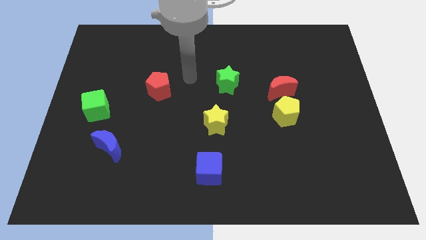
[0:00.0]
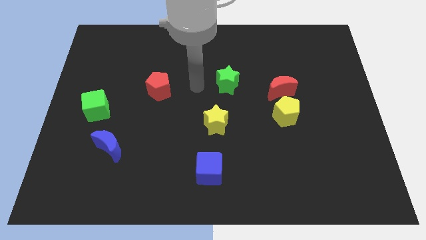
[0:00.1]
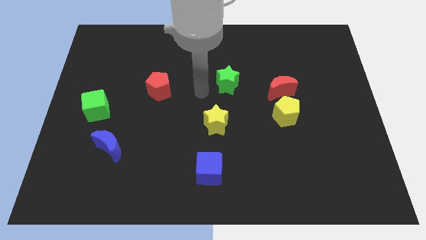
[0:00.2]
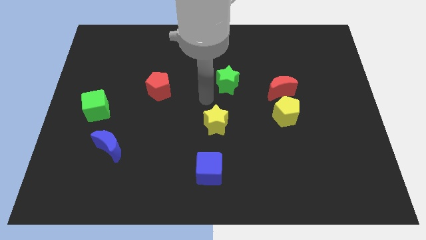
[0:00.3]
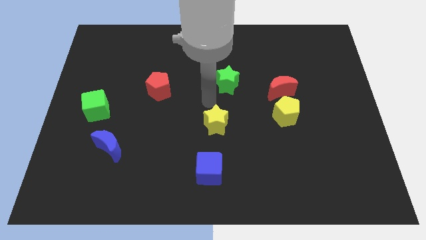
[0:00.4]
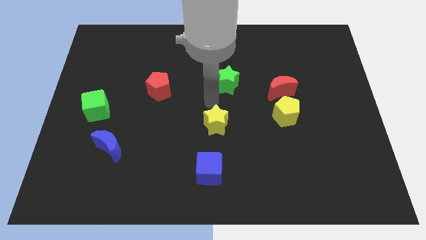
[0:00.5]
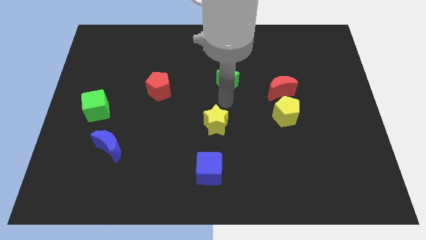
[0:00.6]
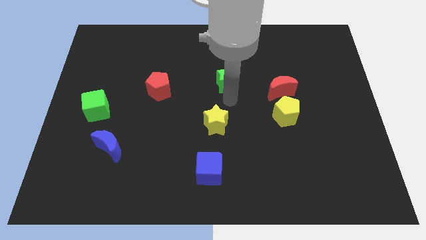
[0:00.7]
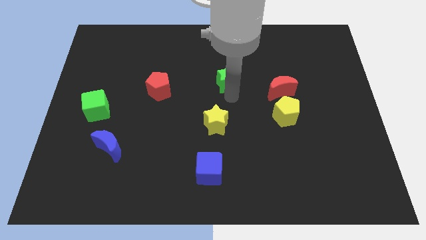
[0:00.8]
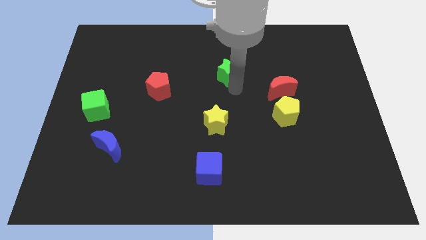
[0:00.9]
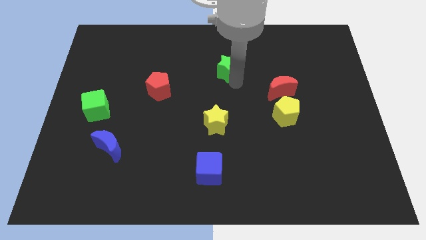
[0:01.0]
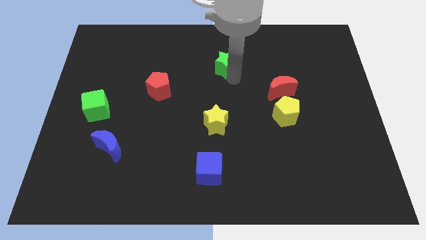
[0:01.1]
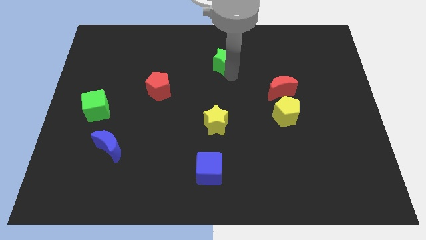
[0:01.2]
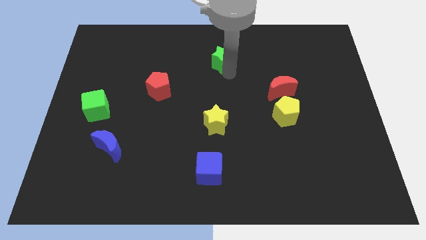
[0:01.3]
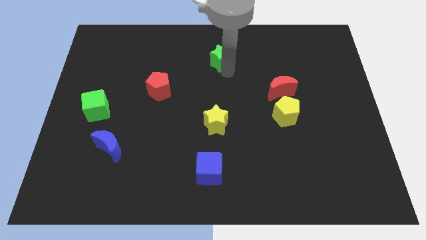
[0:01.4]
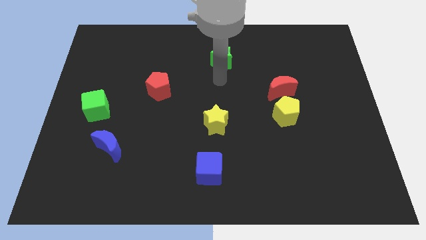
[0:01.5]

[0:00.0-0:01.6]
push the green star slightly upwards

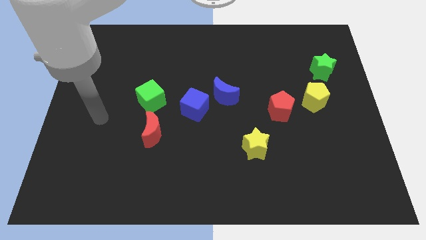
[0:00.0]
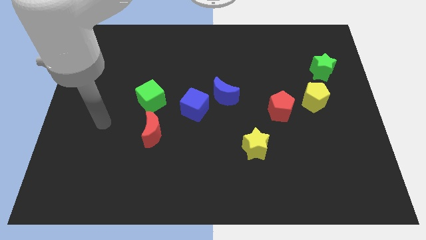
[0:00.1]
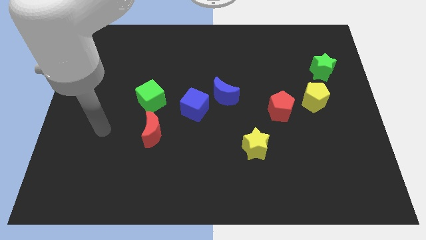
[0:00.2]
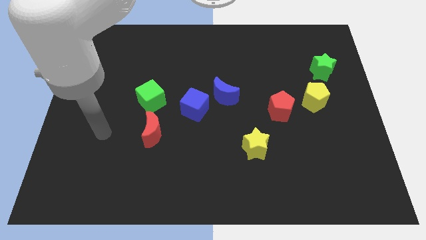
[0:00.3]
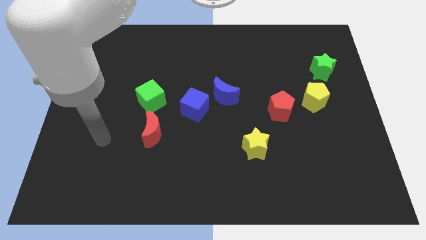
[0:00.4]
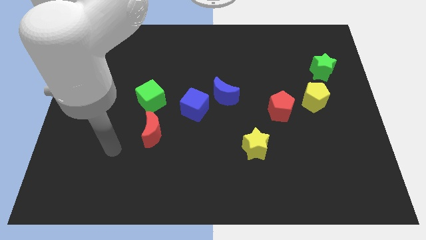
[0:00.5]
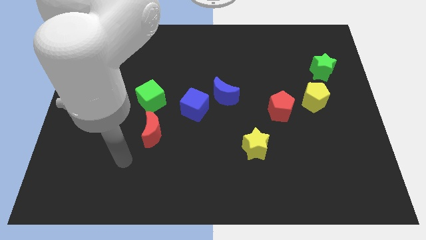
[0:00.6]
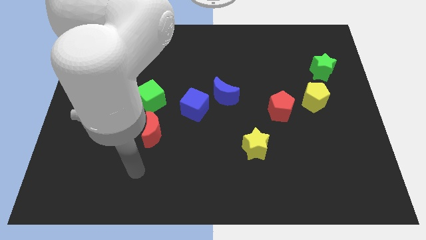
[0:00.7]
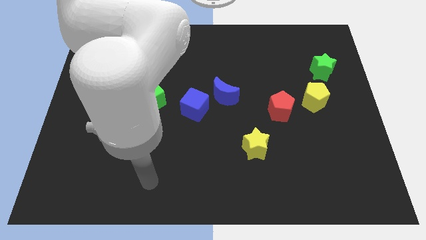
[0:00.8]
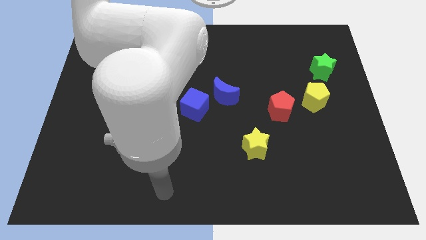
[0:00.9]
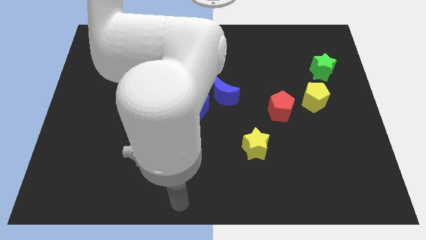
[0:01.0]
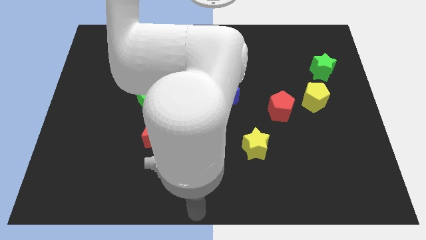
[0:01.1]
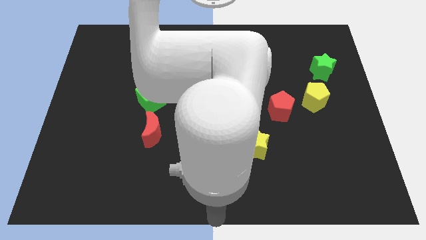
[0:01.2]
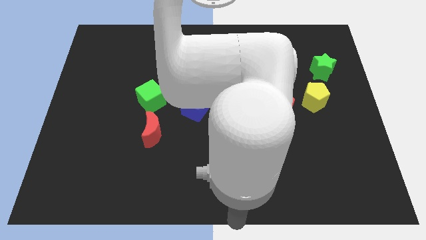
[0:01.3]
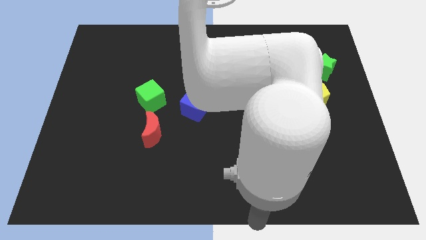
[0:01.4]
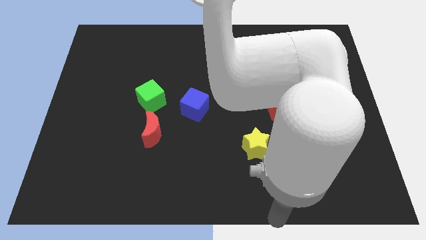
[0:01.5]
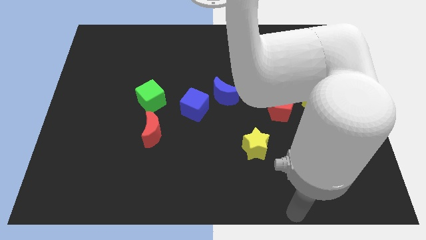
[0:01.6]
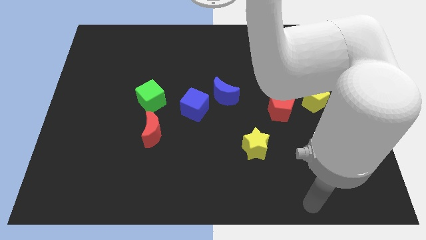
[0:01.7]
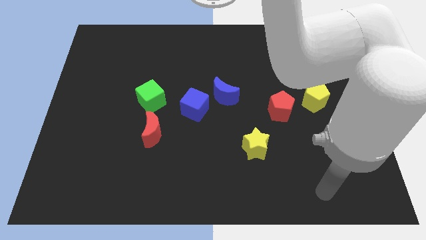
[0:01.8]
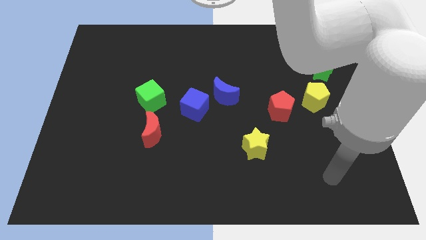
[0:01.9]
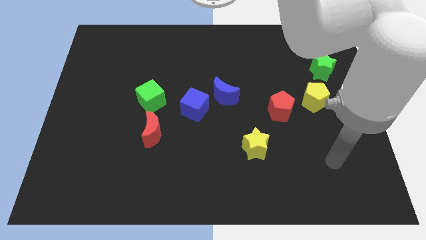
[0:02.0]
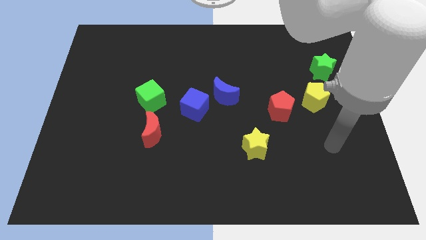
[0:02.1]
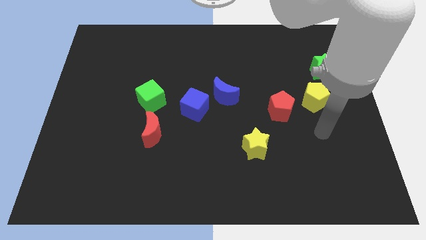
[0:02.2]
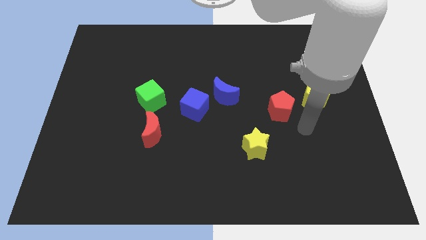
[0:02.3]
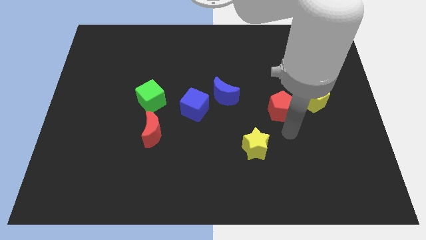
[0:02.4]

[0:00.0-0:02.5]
place your arm below red pentagon

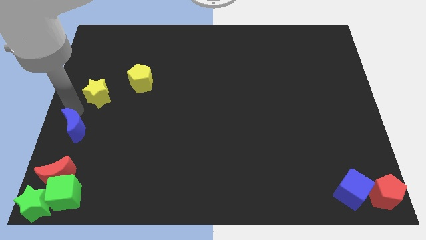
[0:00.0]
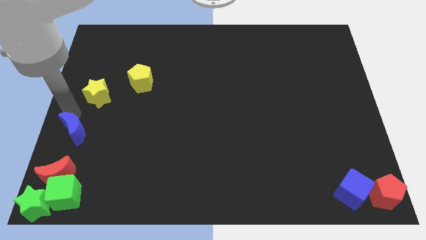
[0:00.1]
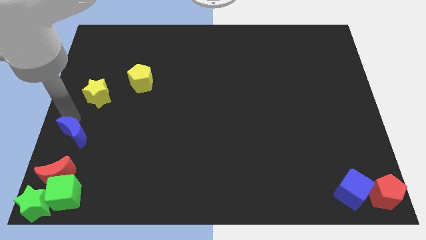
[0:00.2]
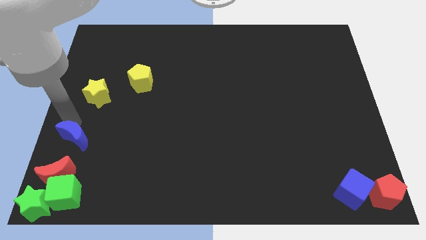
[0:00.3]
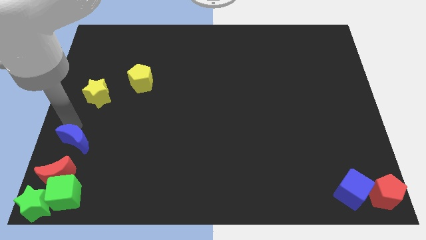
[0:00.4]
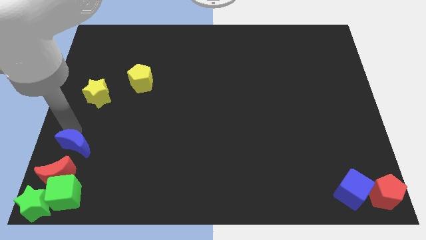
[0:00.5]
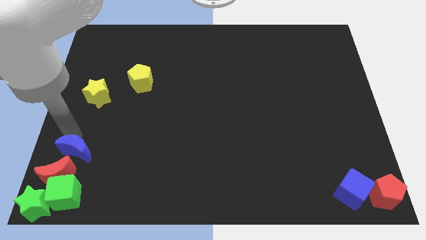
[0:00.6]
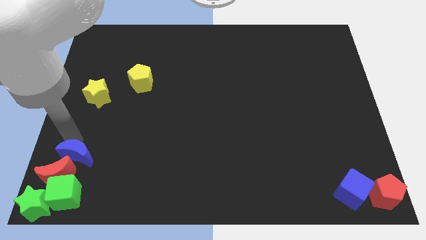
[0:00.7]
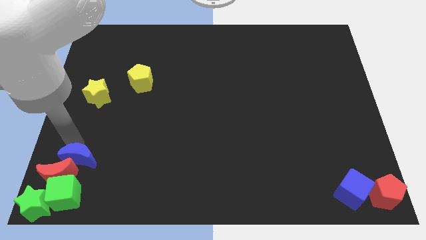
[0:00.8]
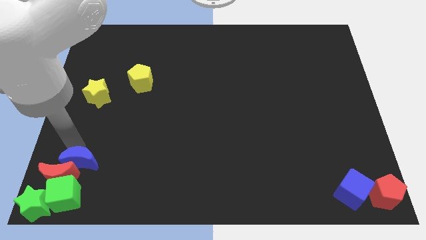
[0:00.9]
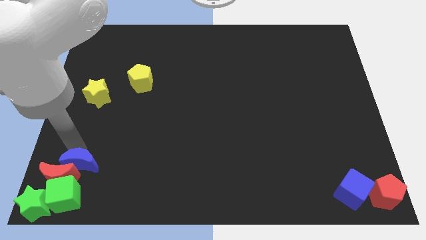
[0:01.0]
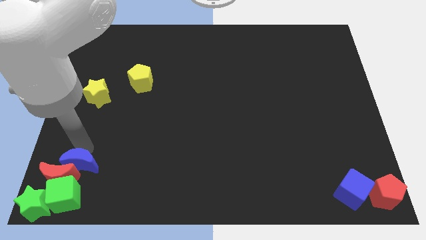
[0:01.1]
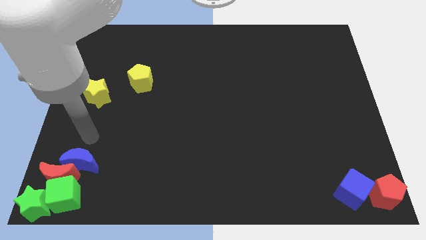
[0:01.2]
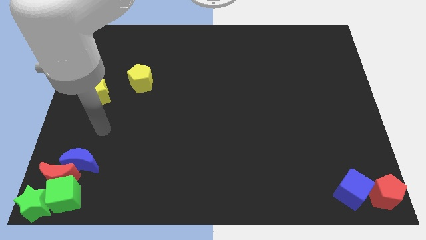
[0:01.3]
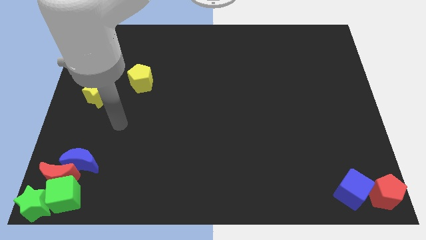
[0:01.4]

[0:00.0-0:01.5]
push the blue moon into the red moon

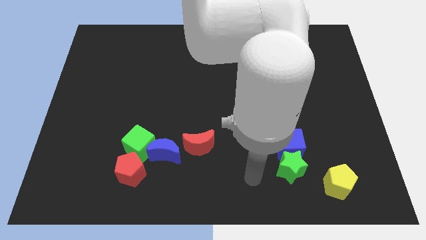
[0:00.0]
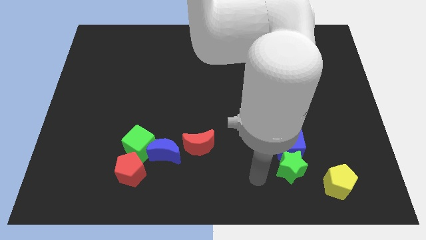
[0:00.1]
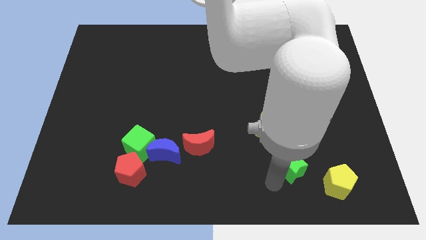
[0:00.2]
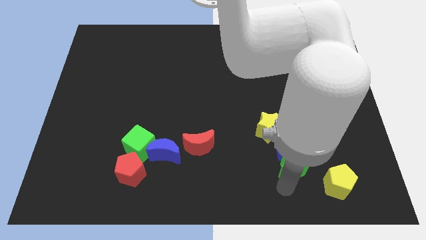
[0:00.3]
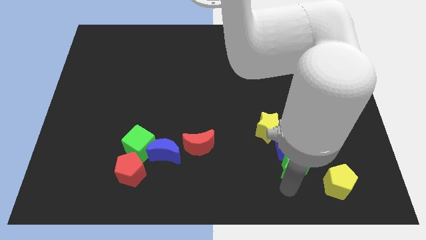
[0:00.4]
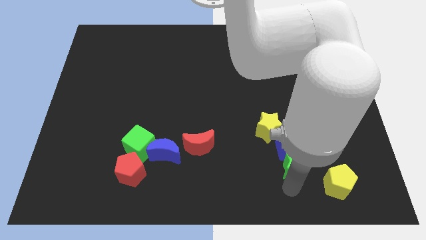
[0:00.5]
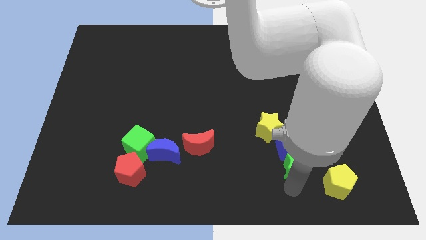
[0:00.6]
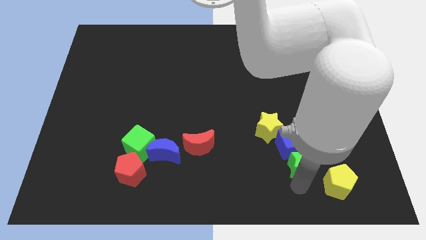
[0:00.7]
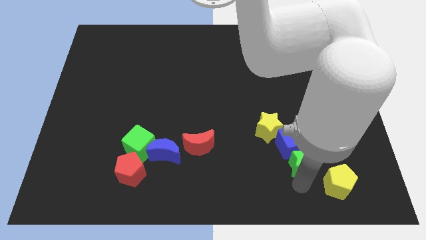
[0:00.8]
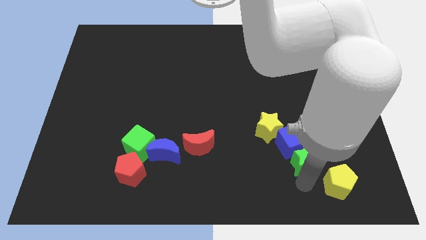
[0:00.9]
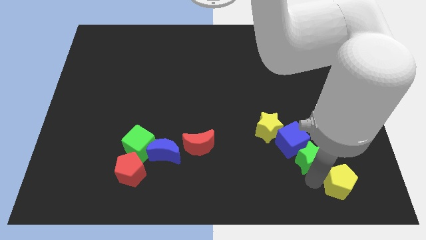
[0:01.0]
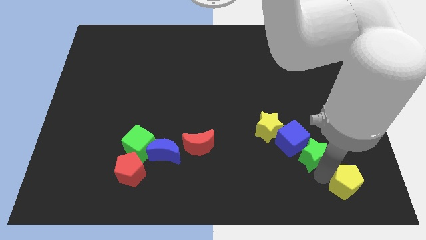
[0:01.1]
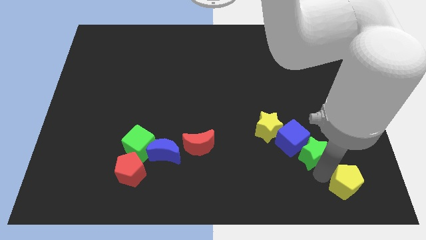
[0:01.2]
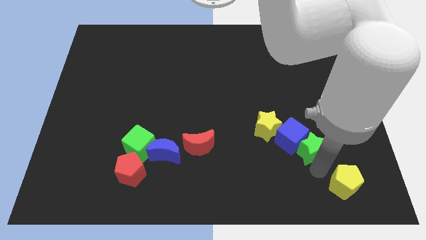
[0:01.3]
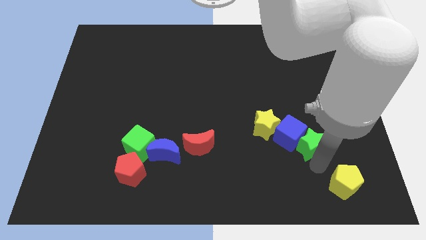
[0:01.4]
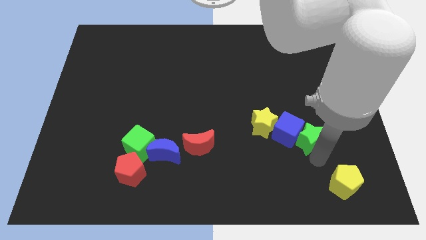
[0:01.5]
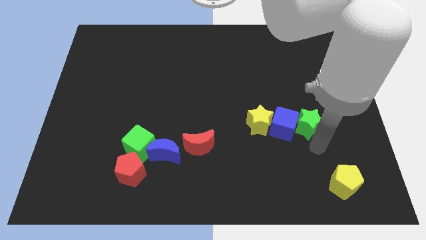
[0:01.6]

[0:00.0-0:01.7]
slide the green star and blue cube to the right side of the yellow star

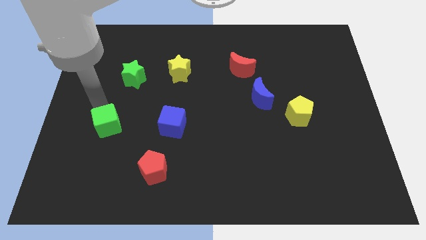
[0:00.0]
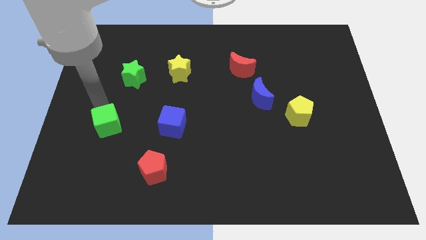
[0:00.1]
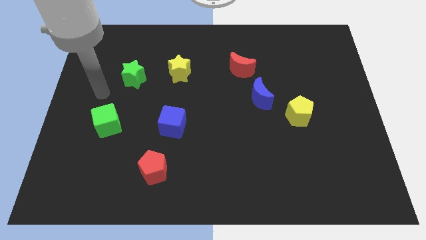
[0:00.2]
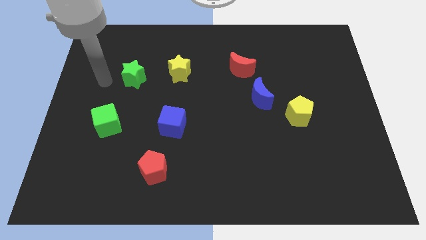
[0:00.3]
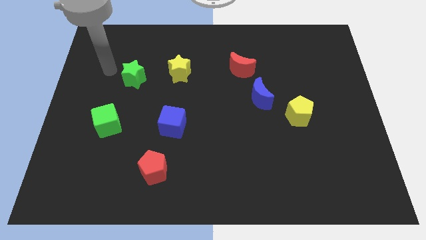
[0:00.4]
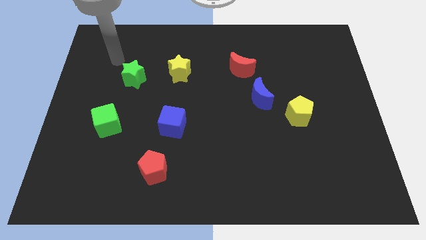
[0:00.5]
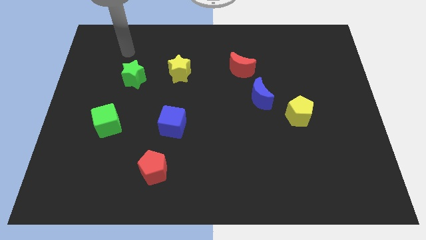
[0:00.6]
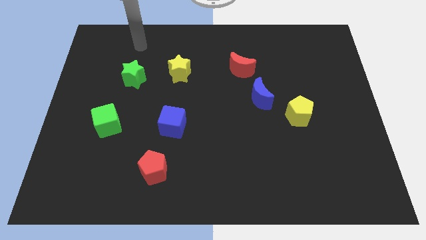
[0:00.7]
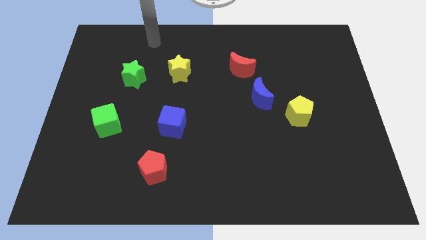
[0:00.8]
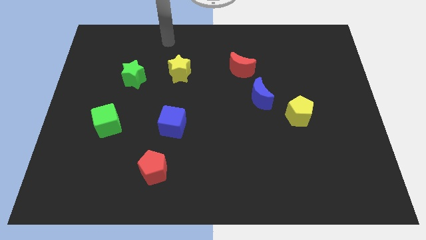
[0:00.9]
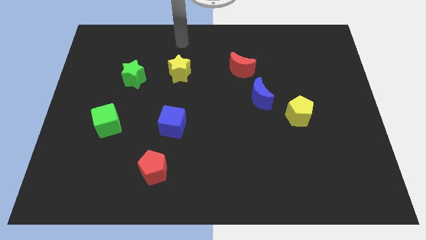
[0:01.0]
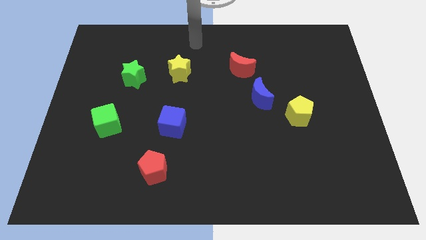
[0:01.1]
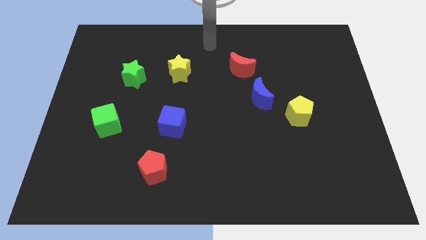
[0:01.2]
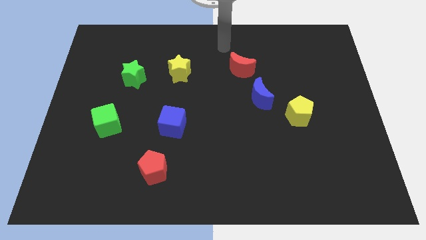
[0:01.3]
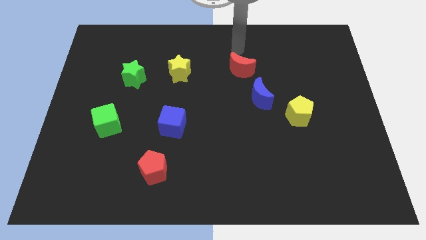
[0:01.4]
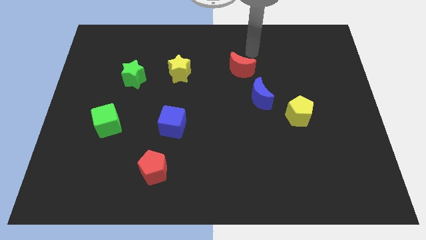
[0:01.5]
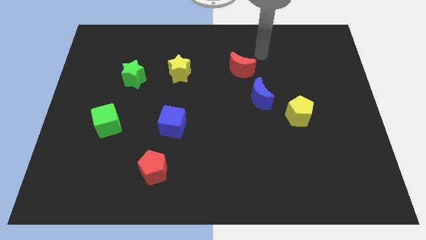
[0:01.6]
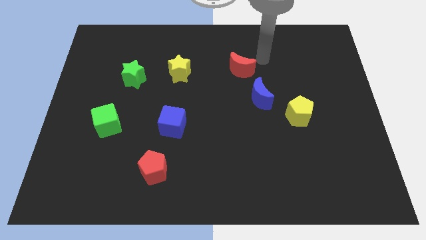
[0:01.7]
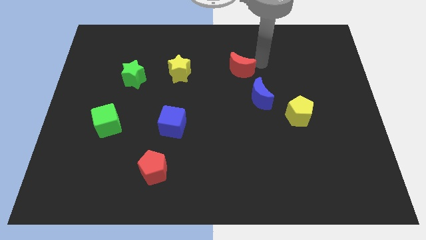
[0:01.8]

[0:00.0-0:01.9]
move yourself away from the green cube
